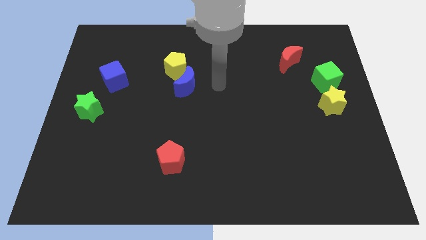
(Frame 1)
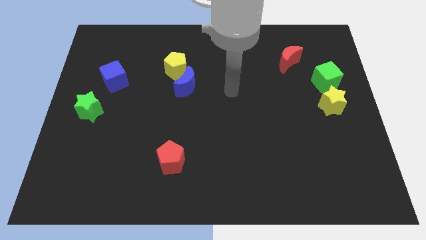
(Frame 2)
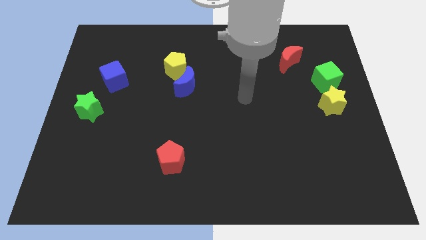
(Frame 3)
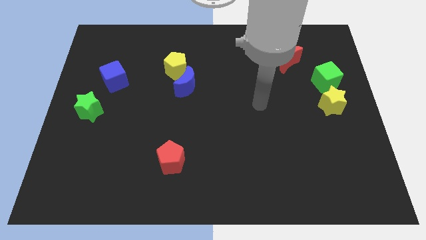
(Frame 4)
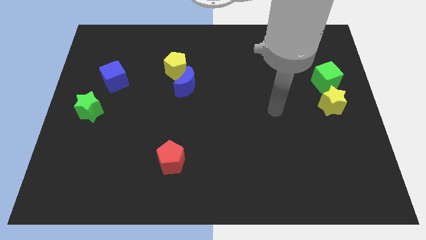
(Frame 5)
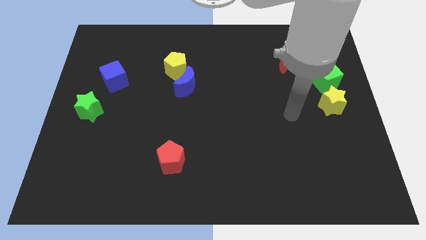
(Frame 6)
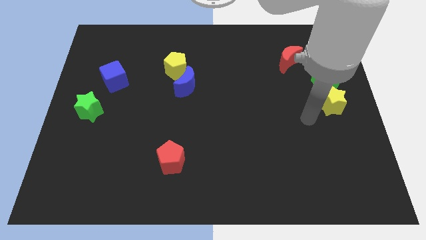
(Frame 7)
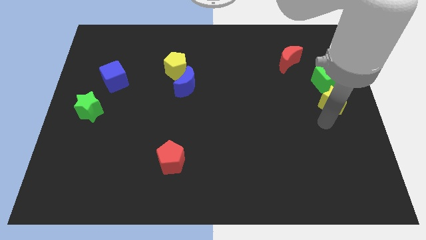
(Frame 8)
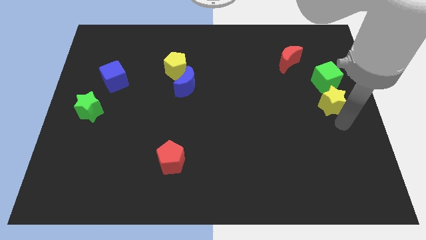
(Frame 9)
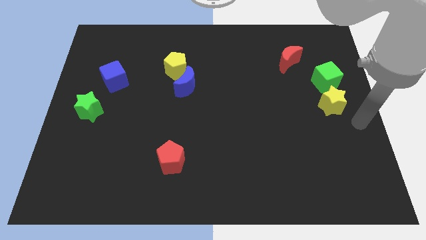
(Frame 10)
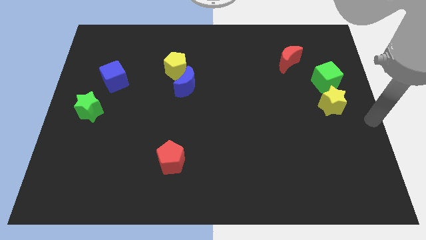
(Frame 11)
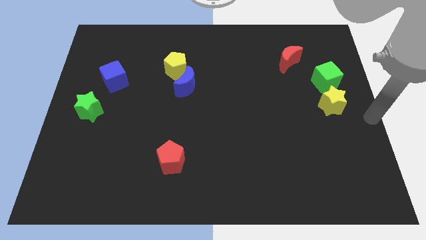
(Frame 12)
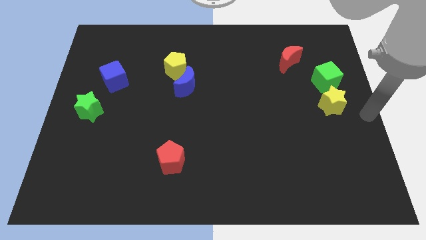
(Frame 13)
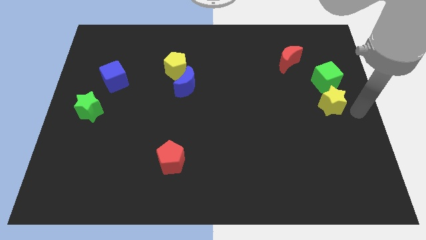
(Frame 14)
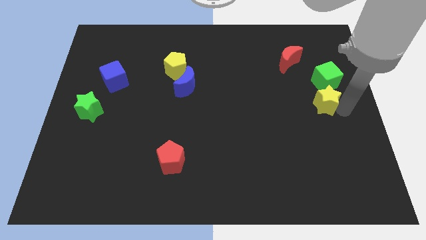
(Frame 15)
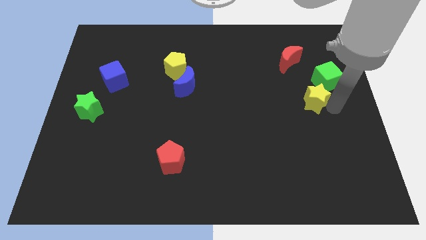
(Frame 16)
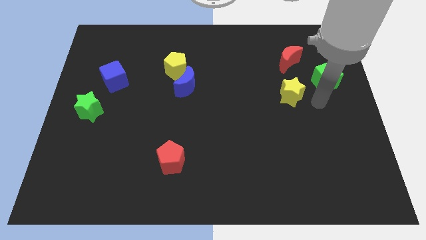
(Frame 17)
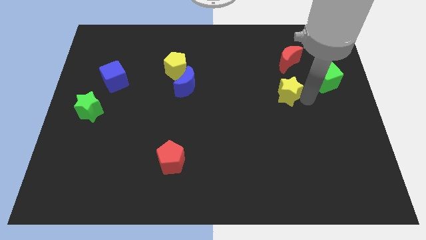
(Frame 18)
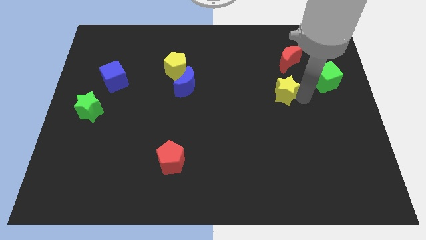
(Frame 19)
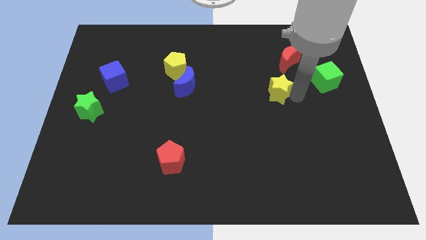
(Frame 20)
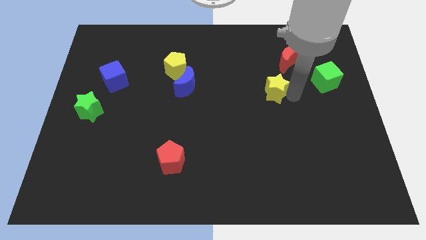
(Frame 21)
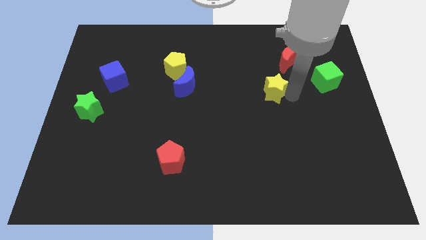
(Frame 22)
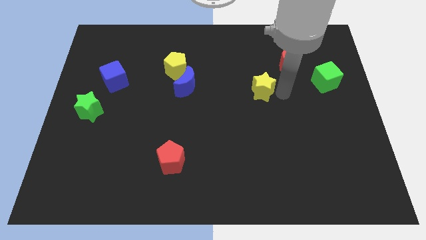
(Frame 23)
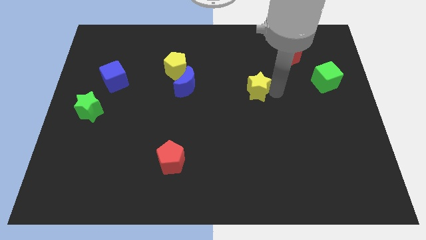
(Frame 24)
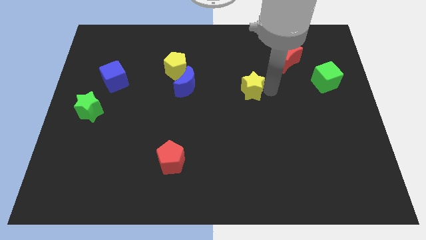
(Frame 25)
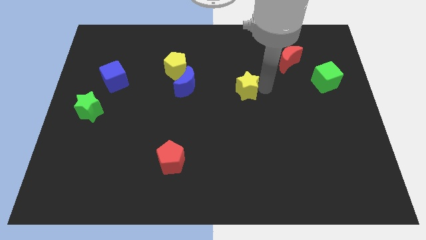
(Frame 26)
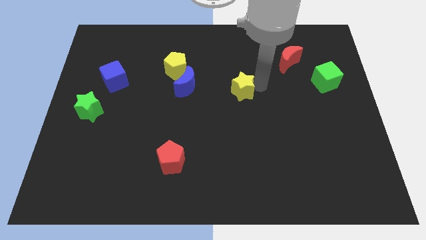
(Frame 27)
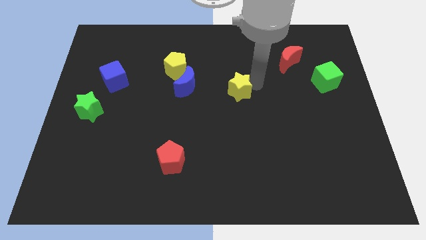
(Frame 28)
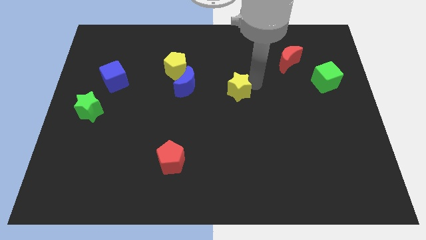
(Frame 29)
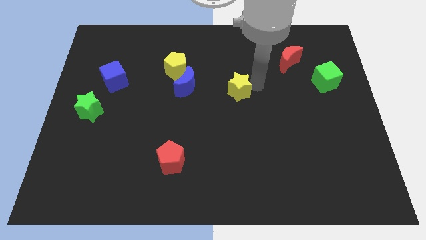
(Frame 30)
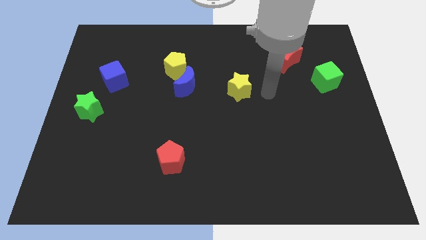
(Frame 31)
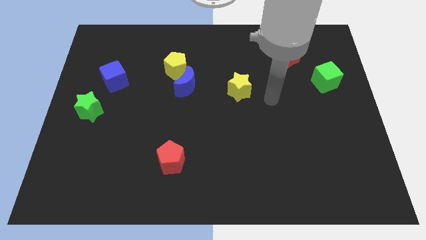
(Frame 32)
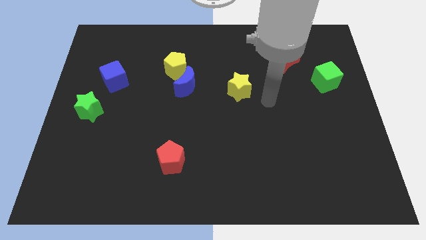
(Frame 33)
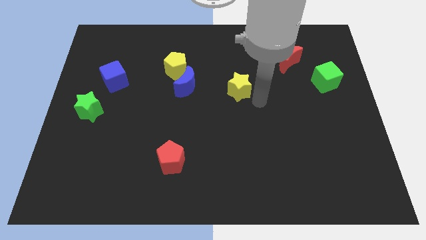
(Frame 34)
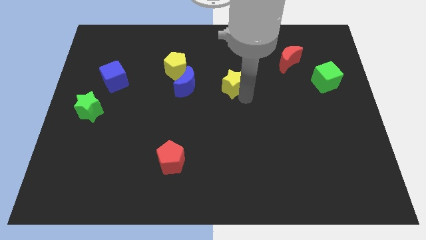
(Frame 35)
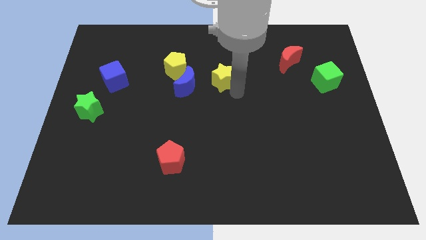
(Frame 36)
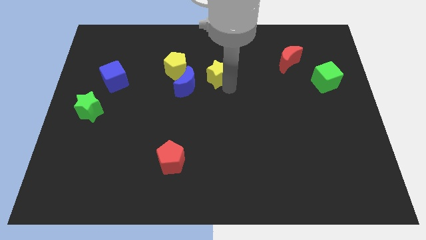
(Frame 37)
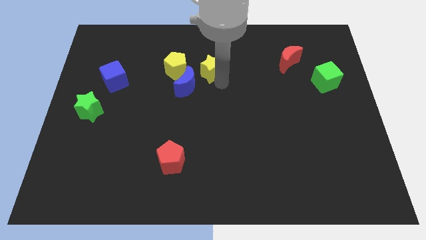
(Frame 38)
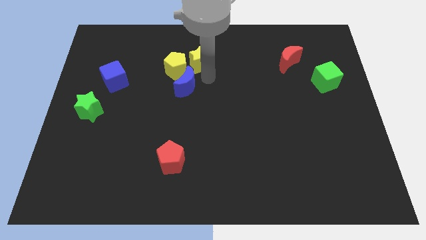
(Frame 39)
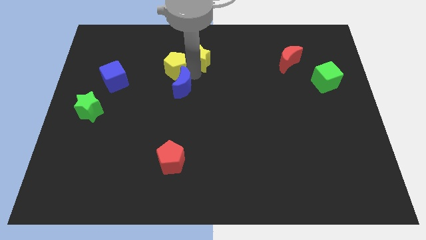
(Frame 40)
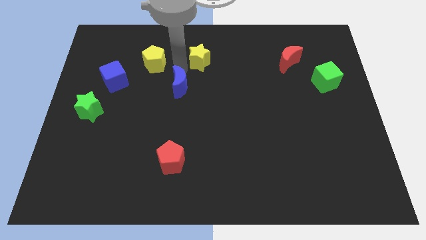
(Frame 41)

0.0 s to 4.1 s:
push yellow star towards yellow pentagon

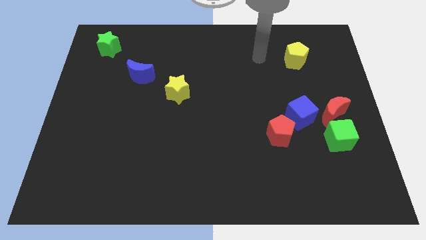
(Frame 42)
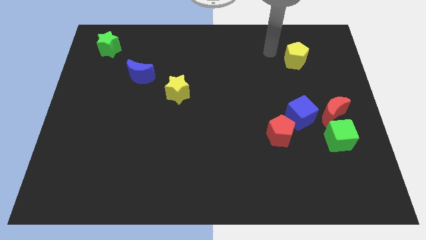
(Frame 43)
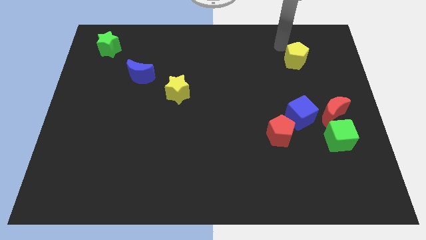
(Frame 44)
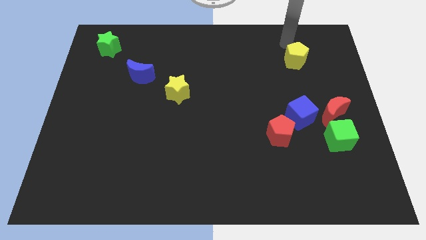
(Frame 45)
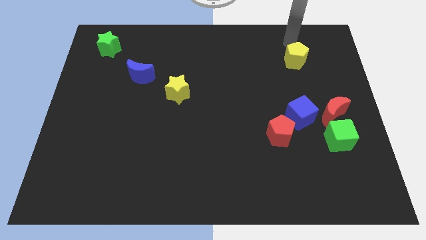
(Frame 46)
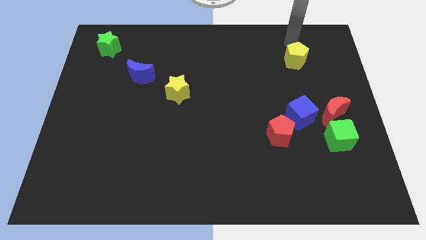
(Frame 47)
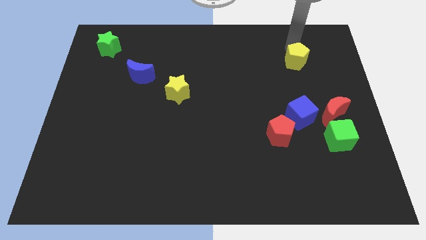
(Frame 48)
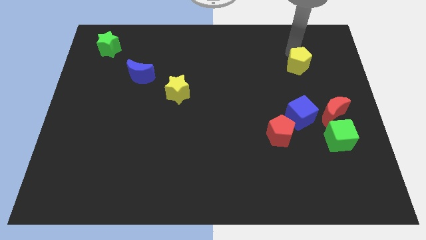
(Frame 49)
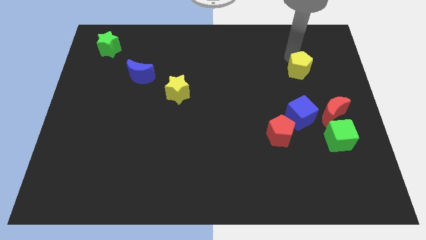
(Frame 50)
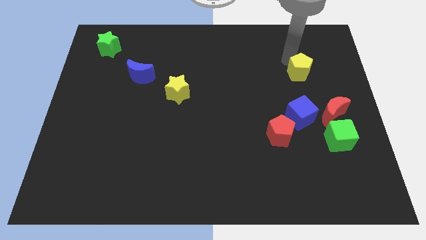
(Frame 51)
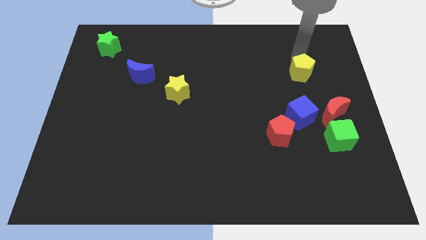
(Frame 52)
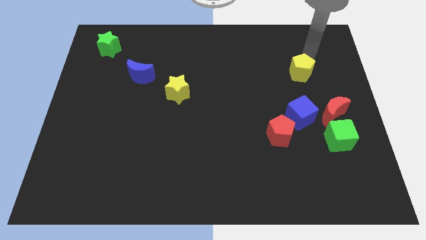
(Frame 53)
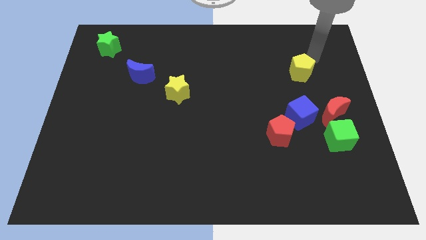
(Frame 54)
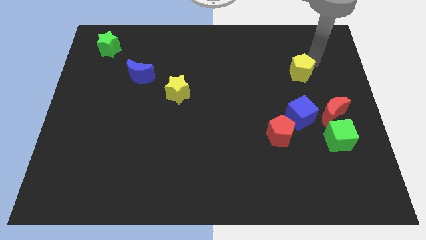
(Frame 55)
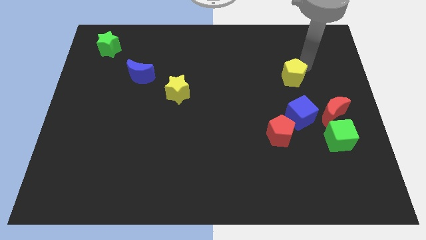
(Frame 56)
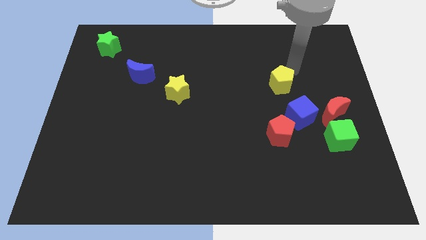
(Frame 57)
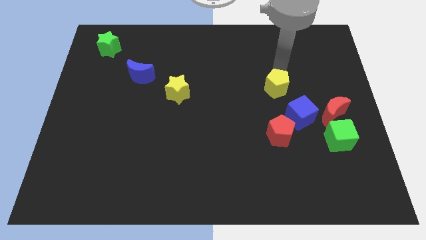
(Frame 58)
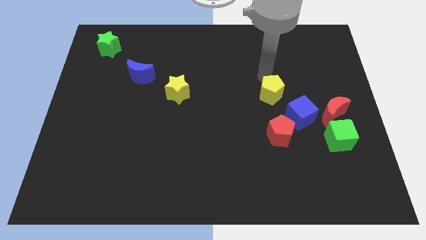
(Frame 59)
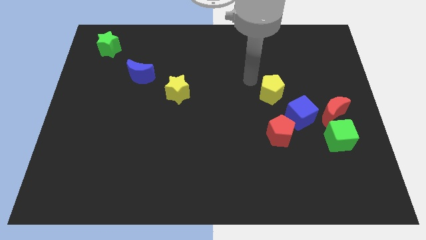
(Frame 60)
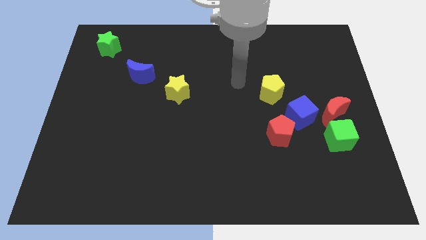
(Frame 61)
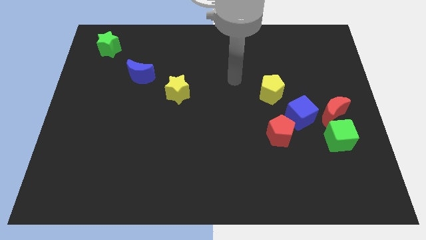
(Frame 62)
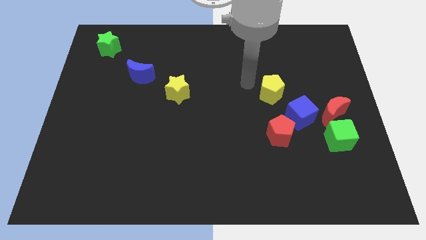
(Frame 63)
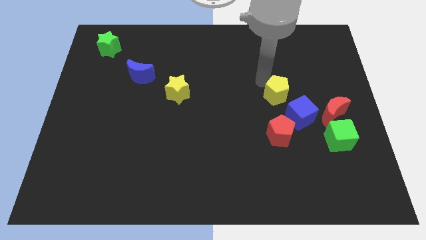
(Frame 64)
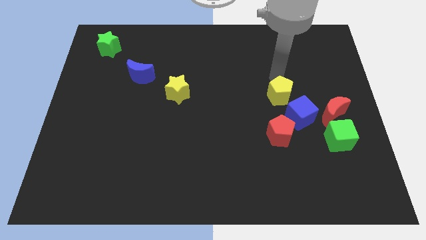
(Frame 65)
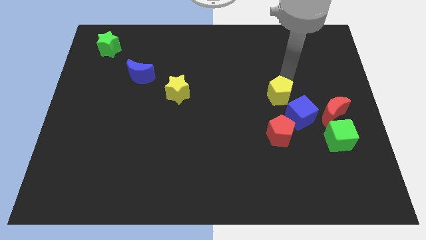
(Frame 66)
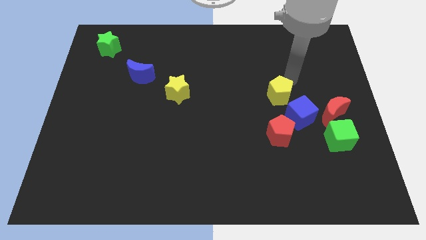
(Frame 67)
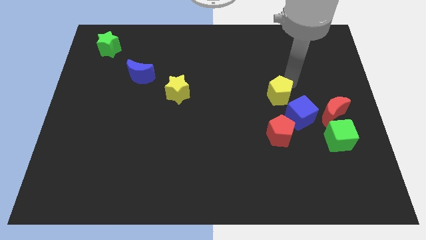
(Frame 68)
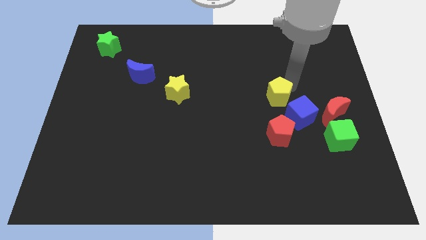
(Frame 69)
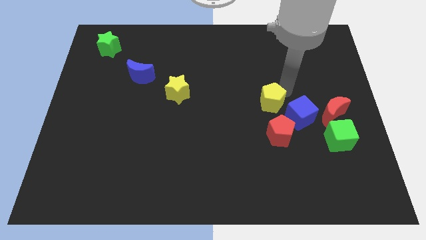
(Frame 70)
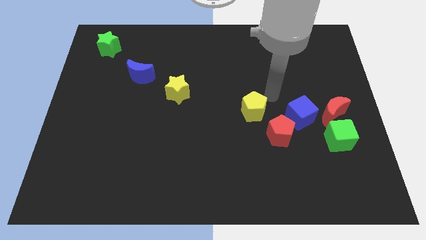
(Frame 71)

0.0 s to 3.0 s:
place the yellow pentagon above the red pentagon

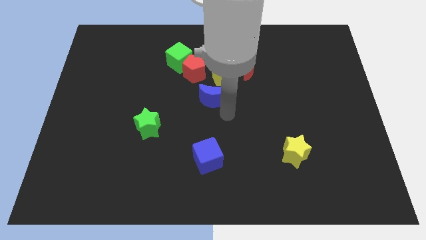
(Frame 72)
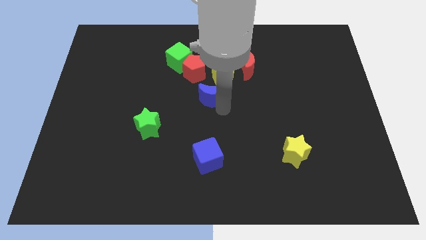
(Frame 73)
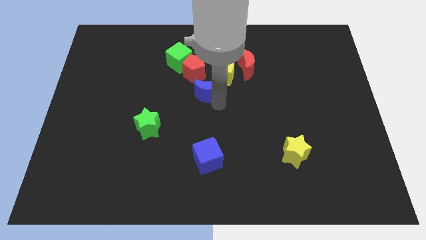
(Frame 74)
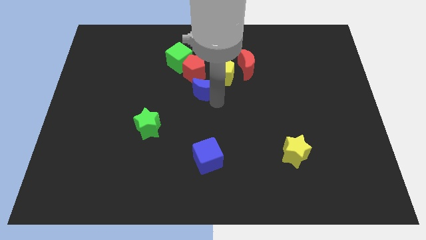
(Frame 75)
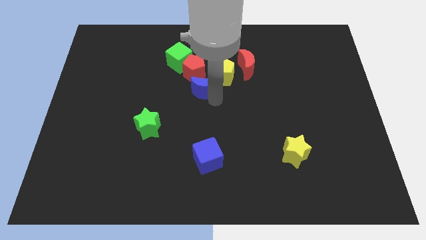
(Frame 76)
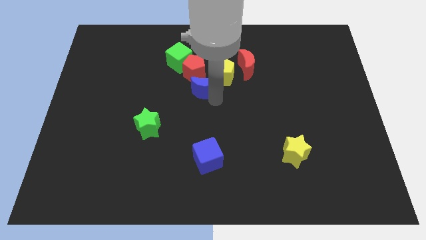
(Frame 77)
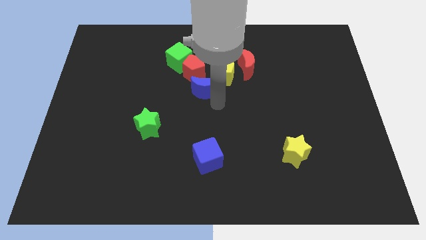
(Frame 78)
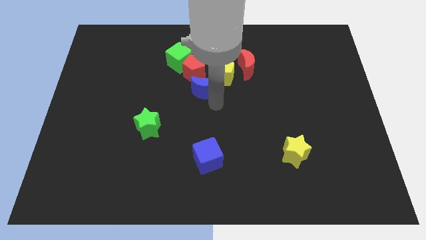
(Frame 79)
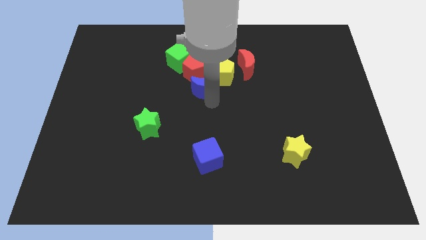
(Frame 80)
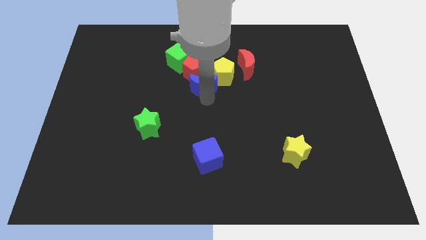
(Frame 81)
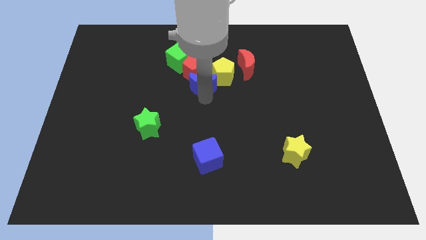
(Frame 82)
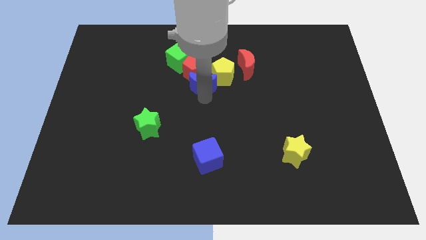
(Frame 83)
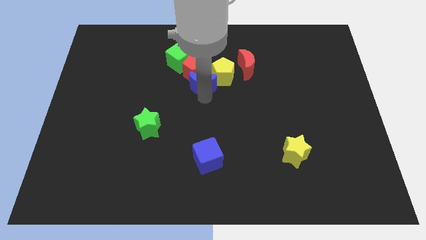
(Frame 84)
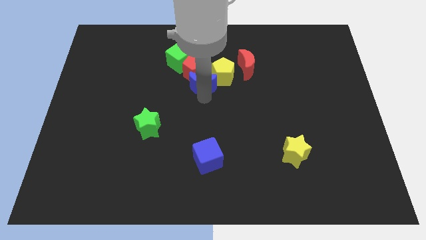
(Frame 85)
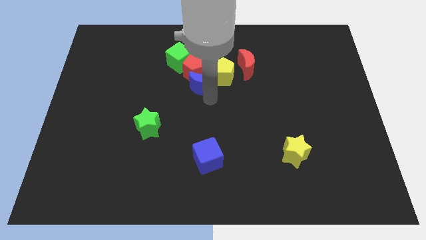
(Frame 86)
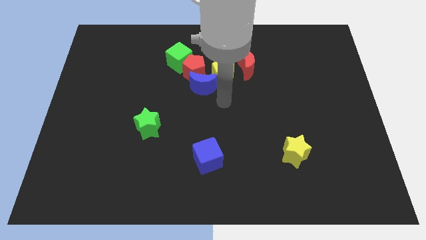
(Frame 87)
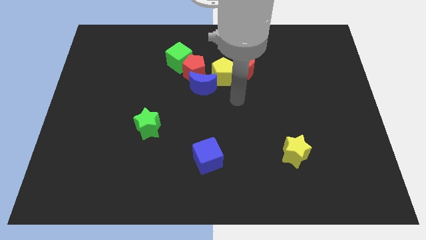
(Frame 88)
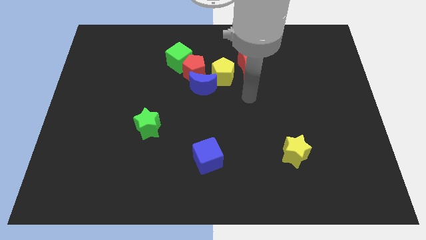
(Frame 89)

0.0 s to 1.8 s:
push the blue crescent into the group of blocks
